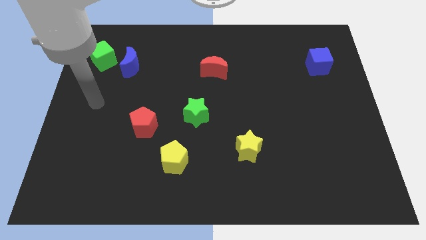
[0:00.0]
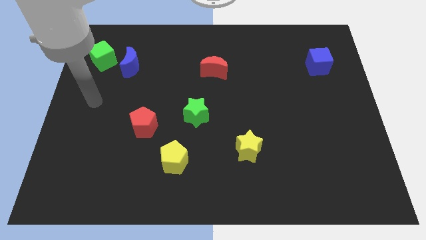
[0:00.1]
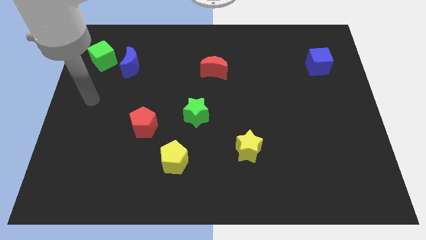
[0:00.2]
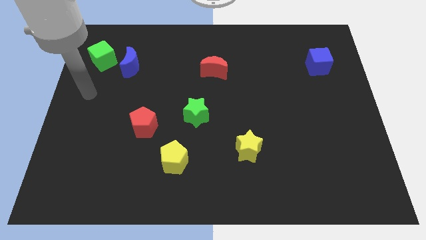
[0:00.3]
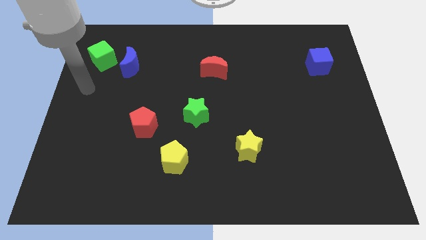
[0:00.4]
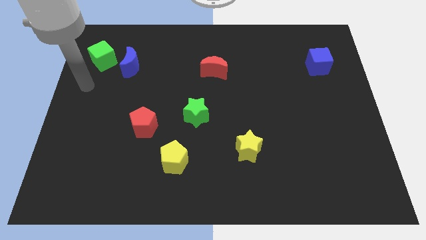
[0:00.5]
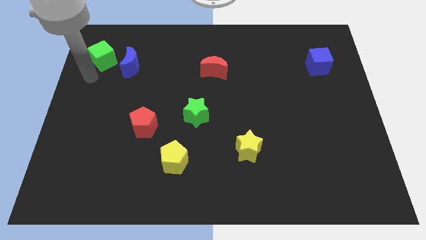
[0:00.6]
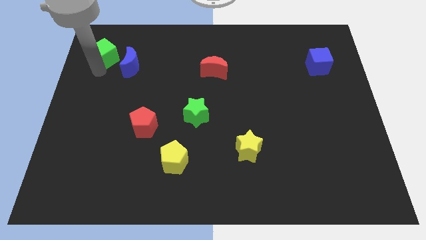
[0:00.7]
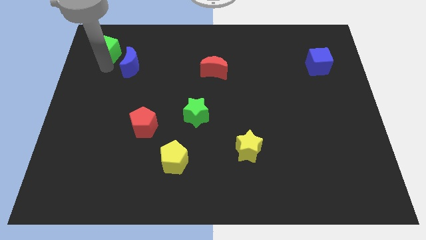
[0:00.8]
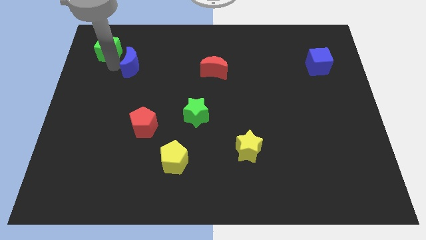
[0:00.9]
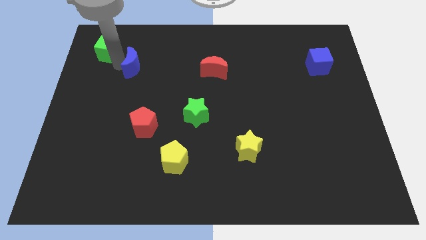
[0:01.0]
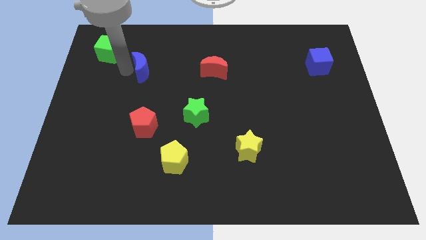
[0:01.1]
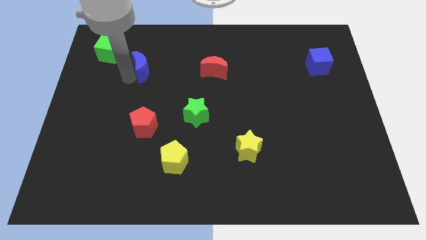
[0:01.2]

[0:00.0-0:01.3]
slightly move the blue crescent above the red pentagon

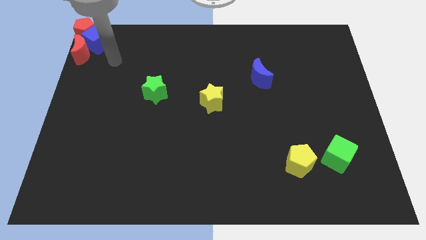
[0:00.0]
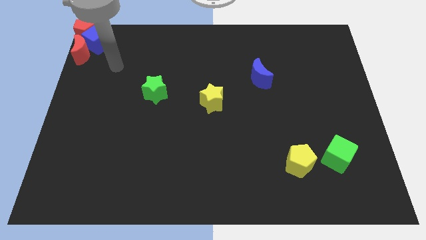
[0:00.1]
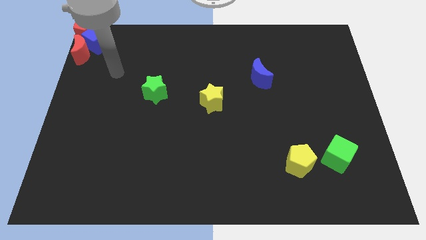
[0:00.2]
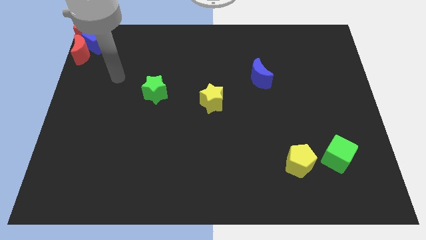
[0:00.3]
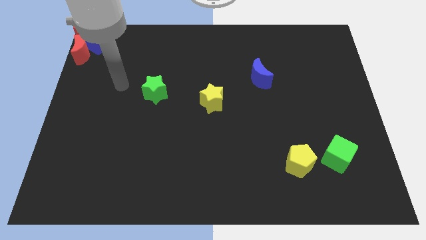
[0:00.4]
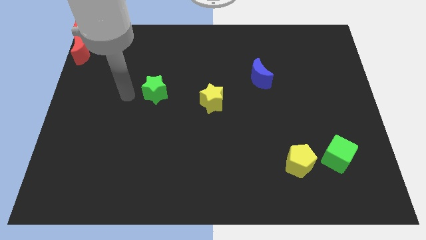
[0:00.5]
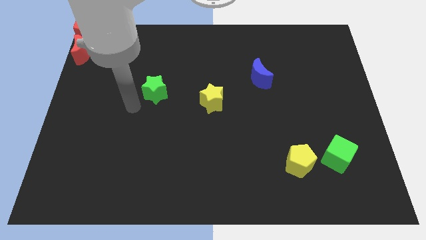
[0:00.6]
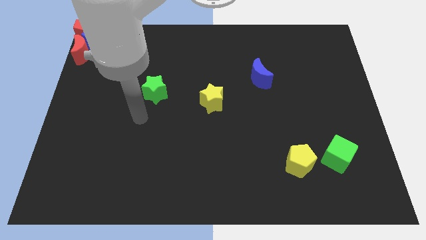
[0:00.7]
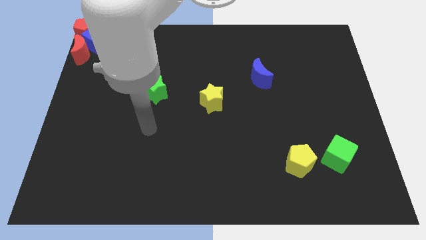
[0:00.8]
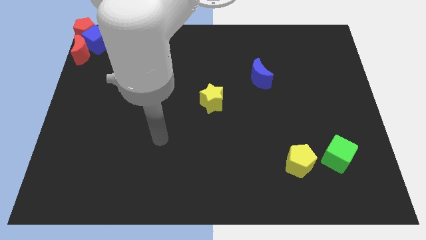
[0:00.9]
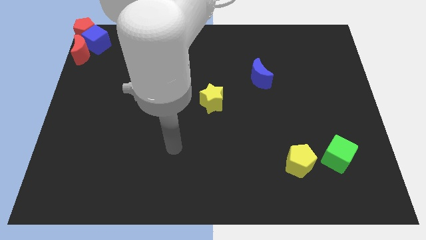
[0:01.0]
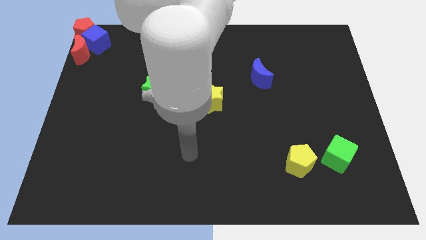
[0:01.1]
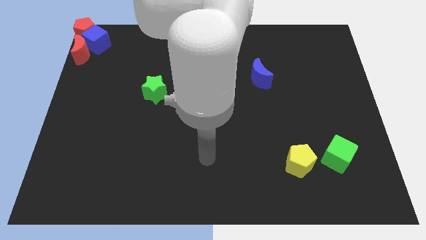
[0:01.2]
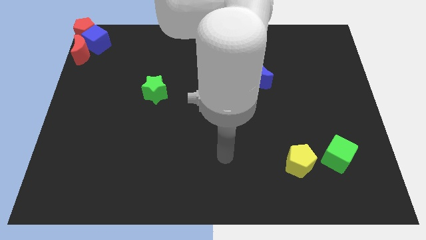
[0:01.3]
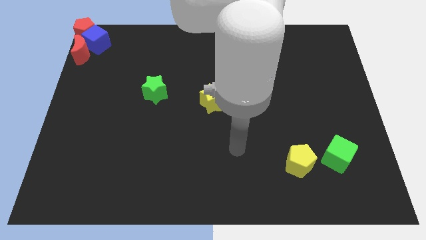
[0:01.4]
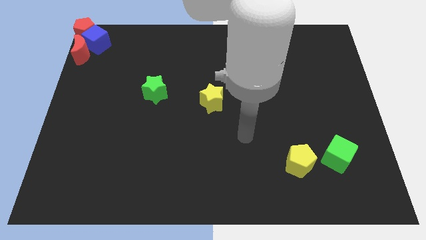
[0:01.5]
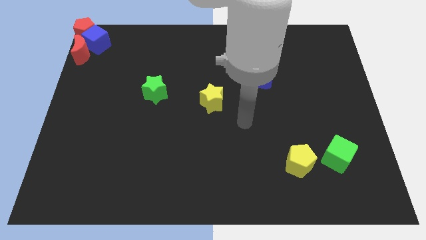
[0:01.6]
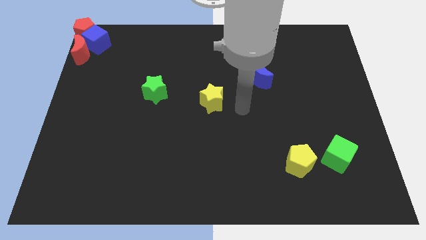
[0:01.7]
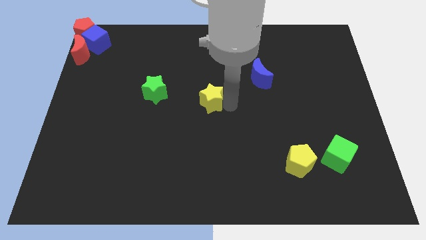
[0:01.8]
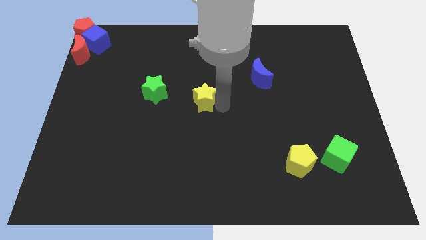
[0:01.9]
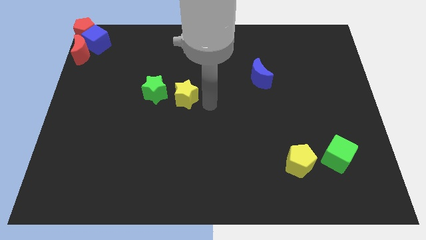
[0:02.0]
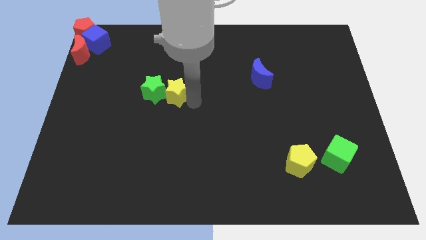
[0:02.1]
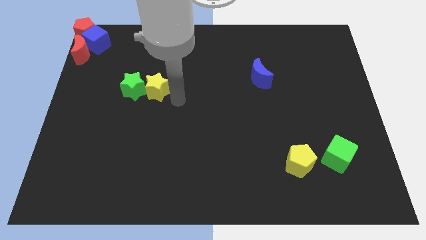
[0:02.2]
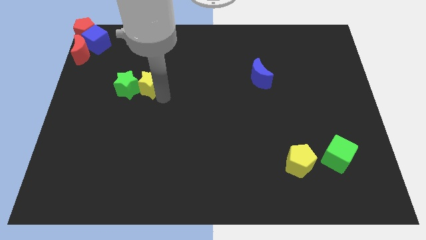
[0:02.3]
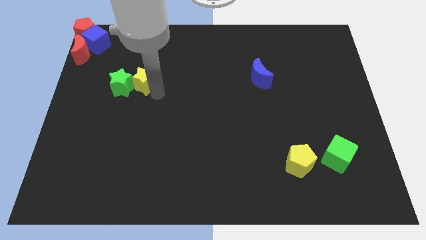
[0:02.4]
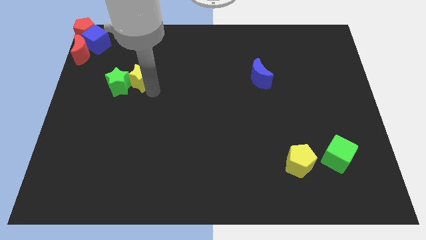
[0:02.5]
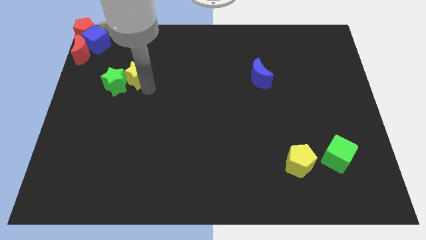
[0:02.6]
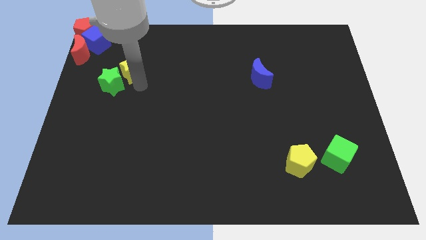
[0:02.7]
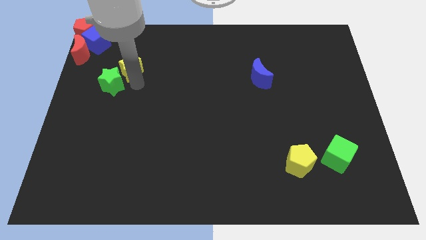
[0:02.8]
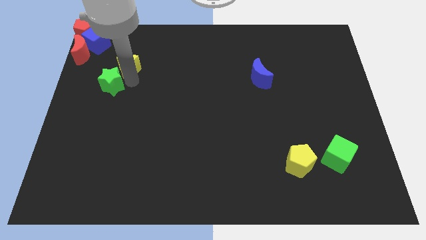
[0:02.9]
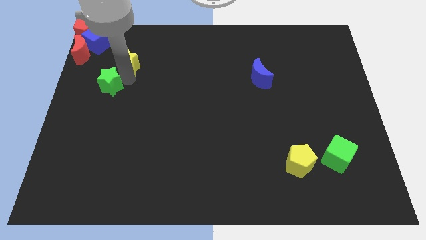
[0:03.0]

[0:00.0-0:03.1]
slide yellow star into green star

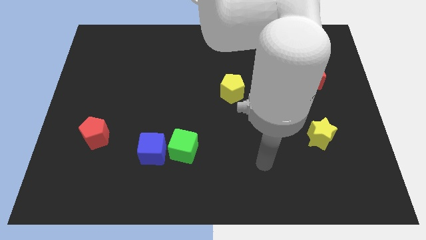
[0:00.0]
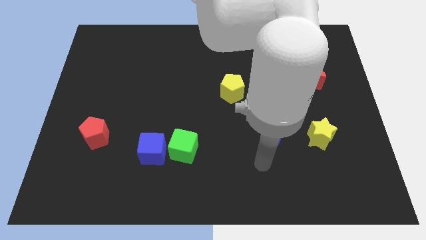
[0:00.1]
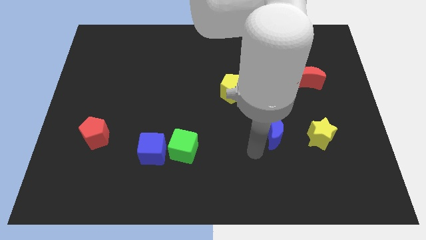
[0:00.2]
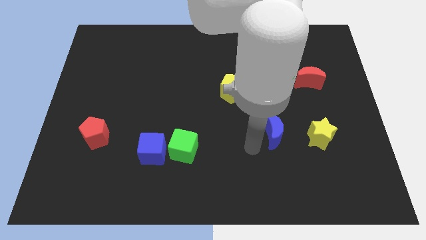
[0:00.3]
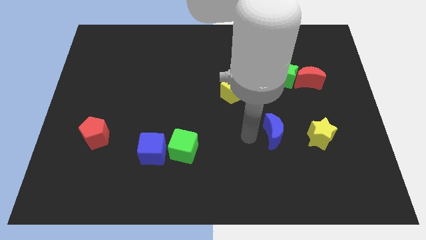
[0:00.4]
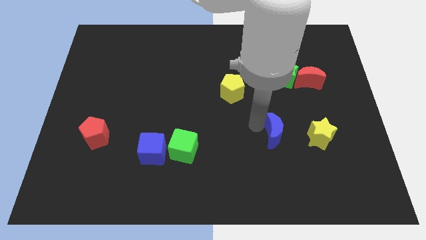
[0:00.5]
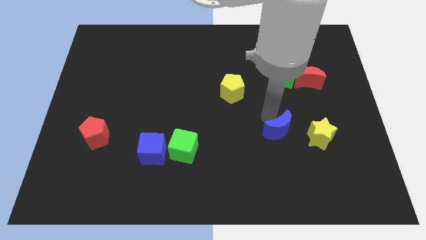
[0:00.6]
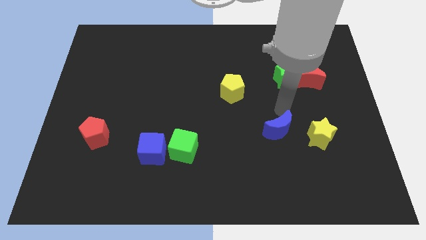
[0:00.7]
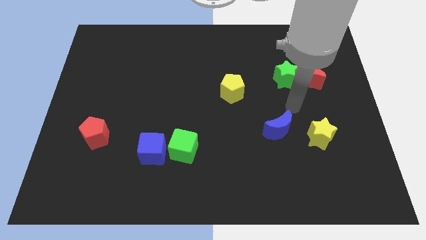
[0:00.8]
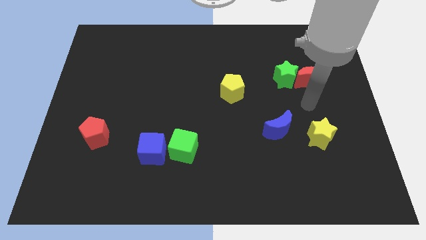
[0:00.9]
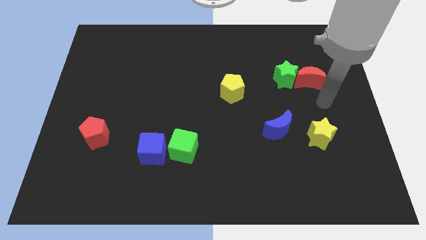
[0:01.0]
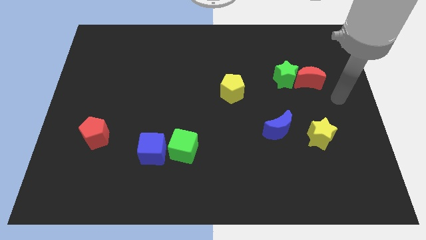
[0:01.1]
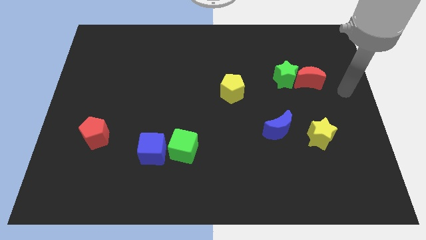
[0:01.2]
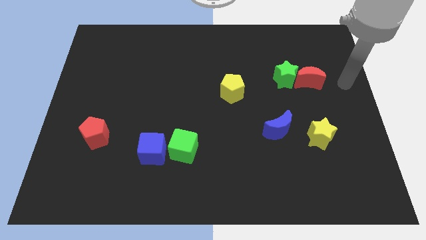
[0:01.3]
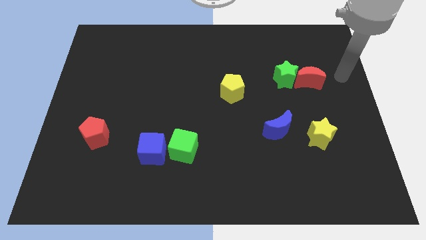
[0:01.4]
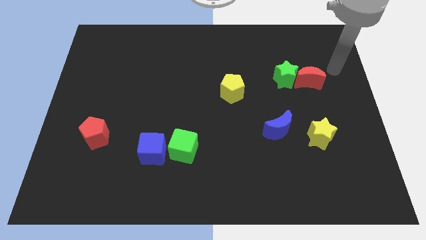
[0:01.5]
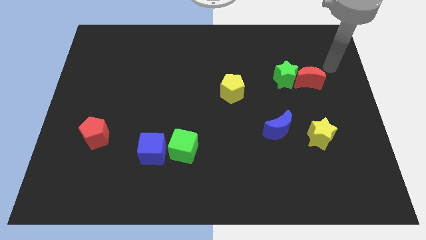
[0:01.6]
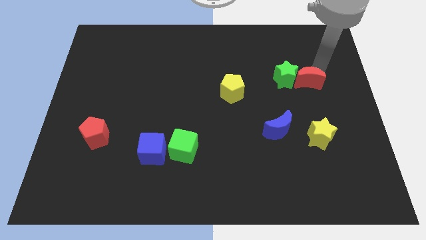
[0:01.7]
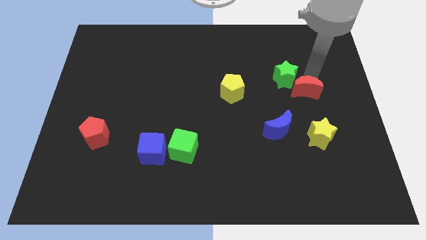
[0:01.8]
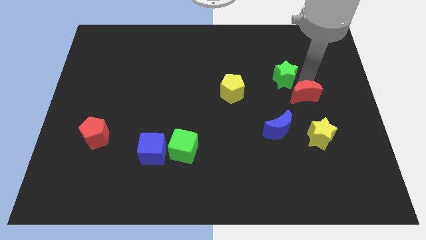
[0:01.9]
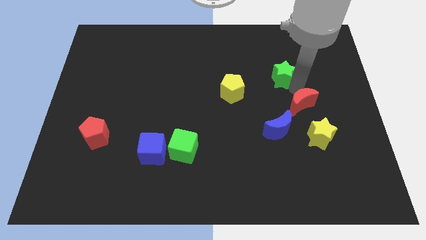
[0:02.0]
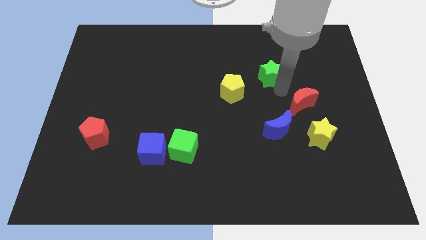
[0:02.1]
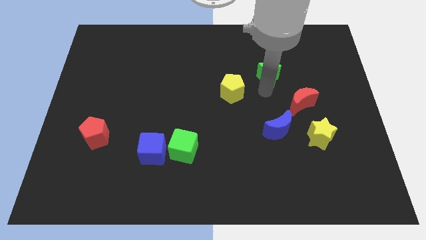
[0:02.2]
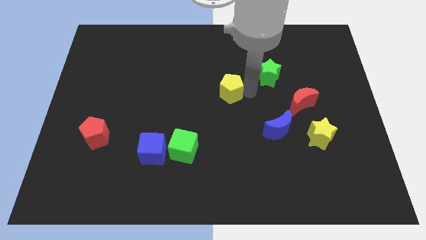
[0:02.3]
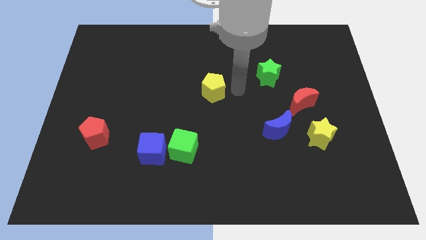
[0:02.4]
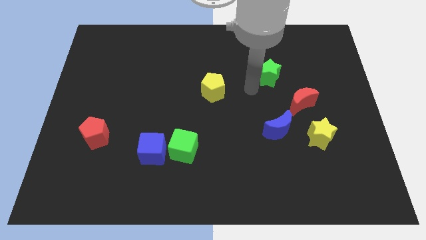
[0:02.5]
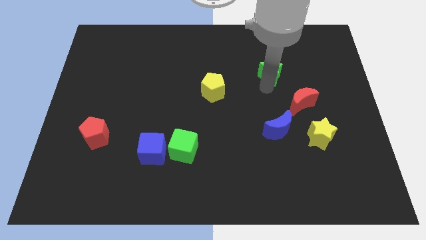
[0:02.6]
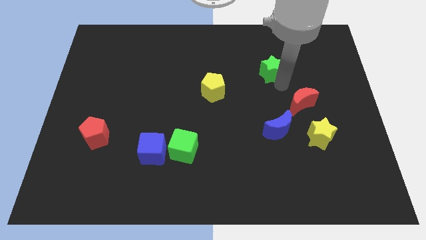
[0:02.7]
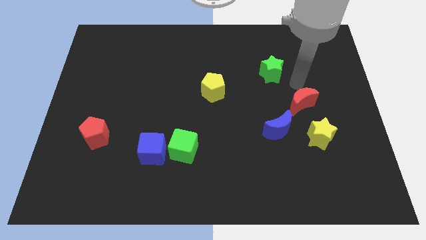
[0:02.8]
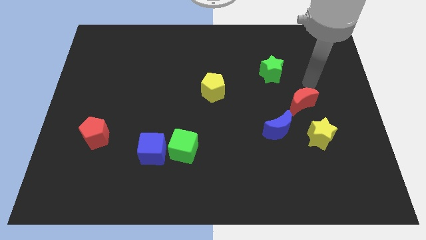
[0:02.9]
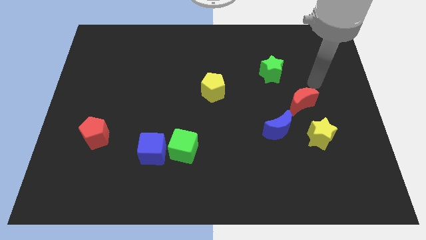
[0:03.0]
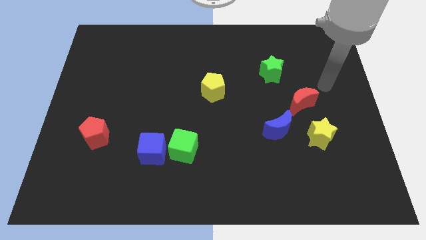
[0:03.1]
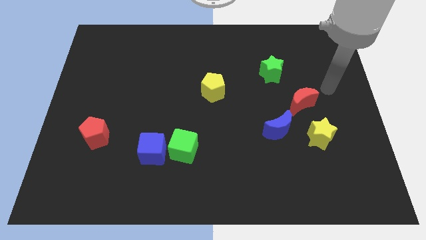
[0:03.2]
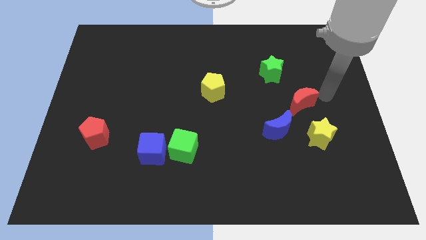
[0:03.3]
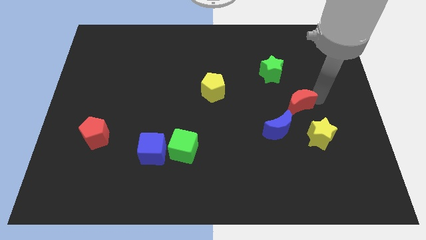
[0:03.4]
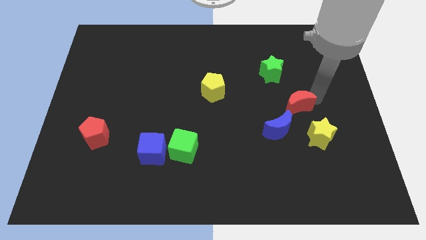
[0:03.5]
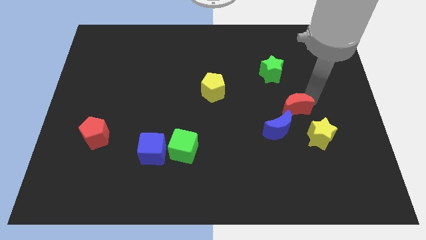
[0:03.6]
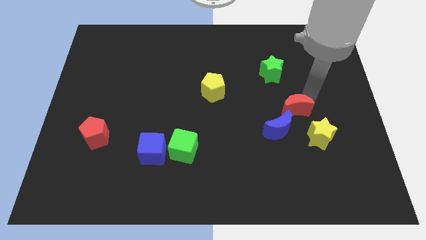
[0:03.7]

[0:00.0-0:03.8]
move your arm close to the red crescent

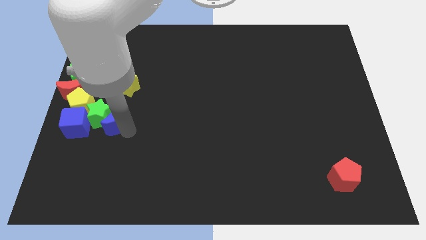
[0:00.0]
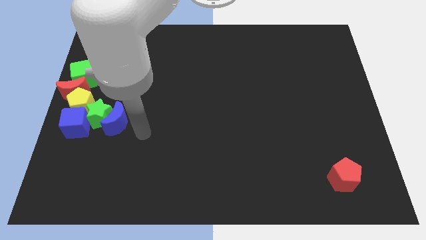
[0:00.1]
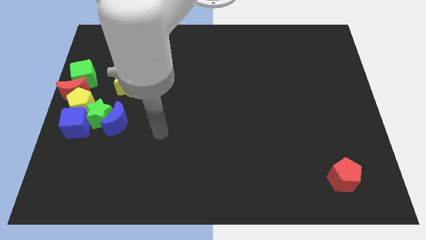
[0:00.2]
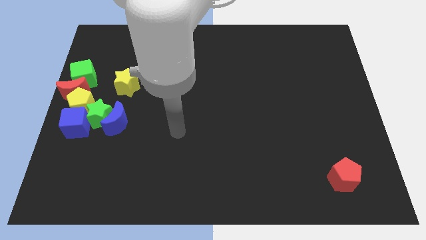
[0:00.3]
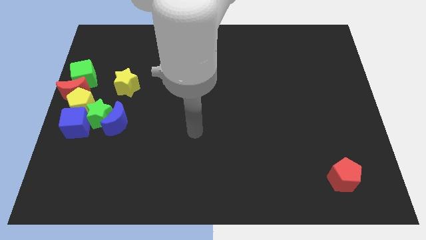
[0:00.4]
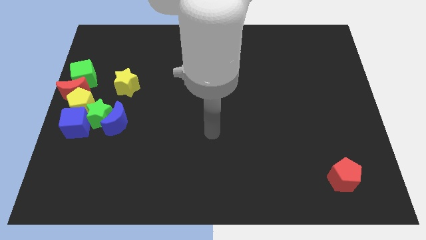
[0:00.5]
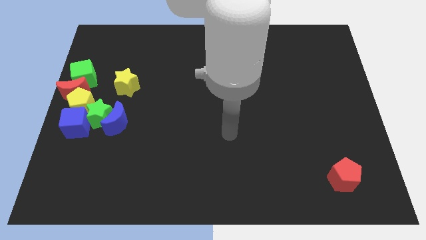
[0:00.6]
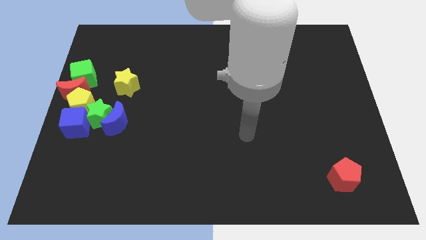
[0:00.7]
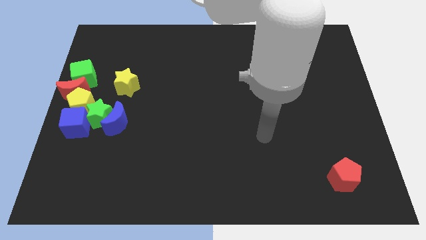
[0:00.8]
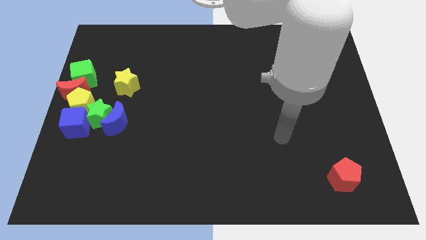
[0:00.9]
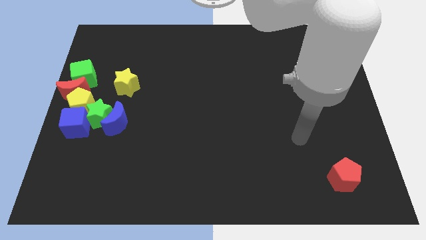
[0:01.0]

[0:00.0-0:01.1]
move your arm away from blue moon
